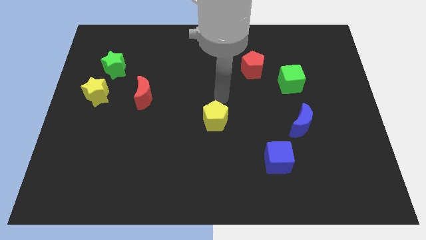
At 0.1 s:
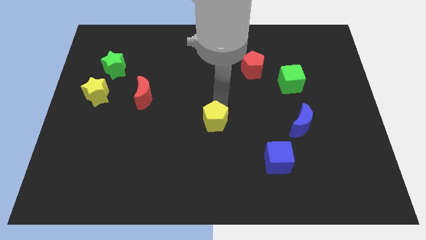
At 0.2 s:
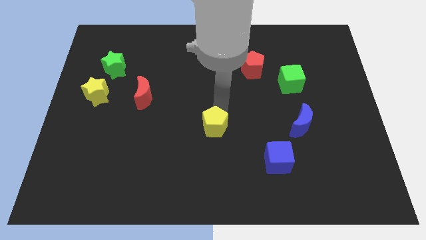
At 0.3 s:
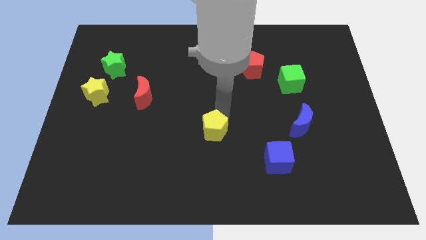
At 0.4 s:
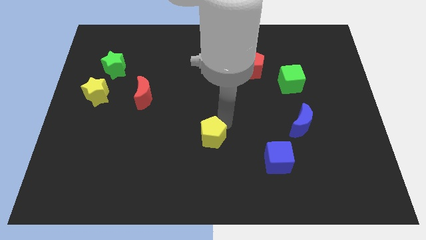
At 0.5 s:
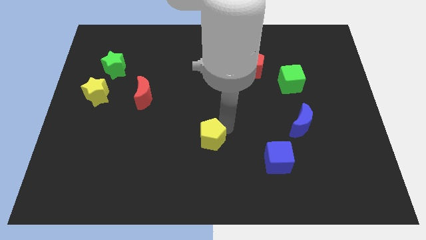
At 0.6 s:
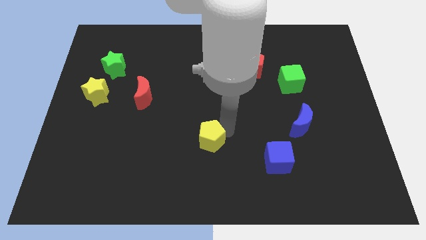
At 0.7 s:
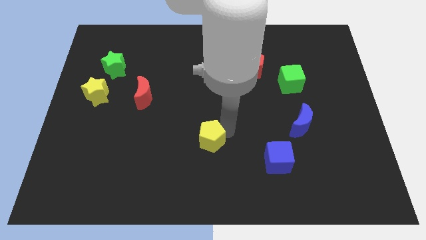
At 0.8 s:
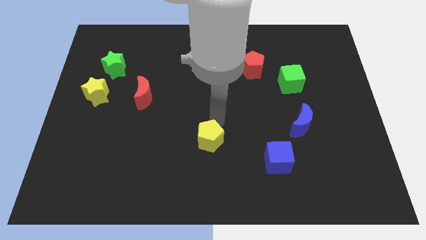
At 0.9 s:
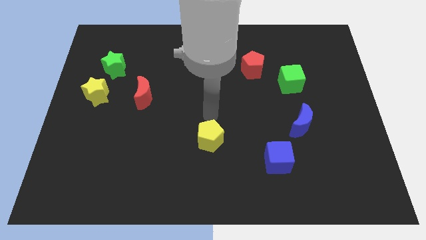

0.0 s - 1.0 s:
push yellow pentagon slightly downwards

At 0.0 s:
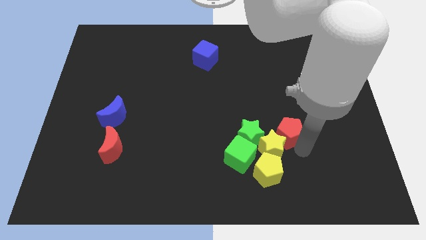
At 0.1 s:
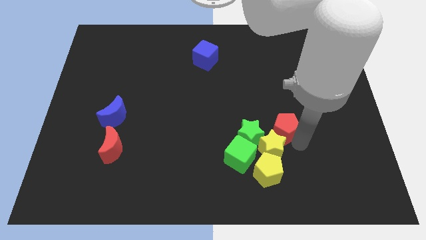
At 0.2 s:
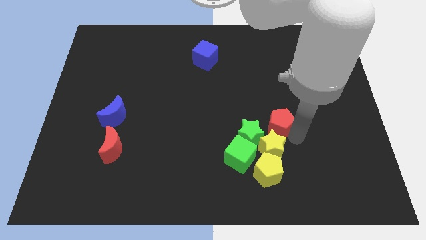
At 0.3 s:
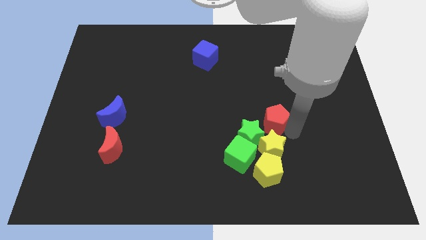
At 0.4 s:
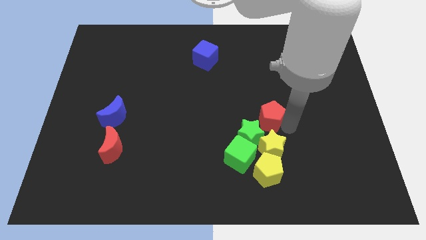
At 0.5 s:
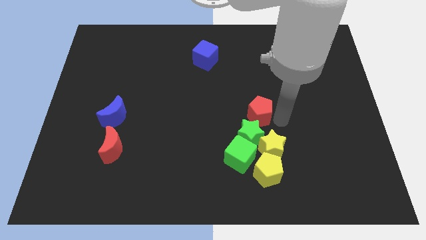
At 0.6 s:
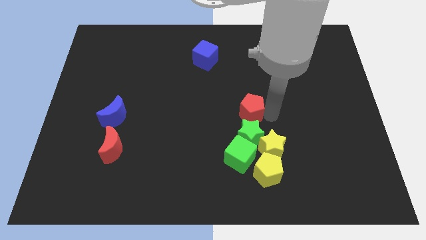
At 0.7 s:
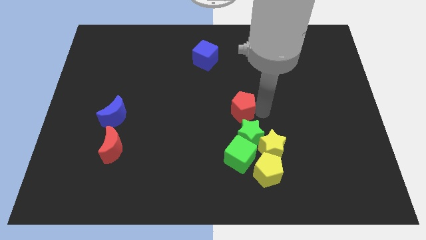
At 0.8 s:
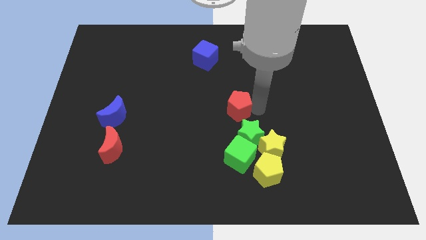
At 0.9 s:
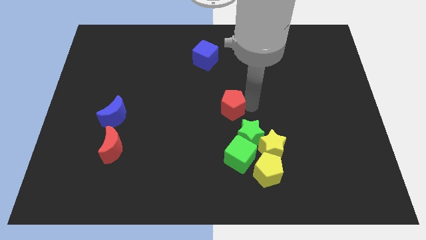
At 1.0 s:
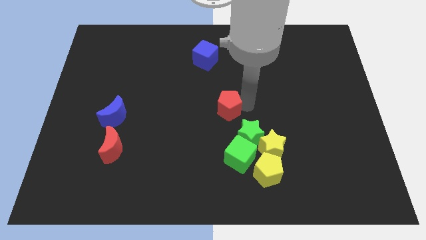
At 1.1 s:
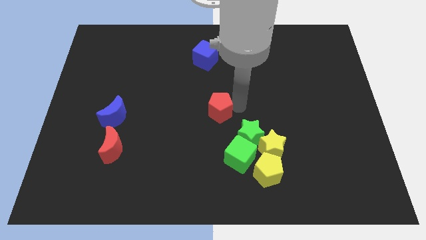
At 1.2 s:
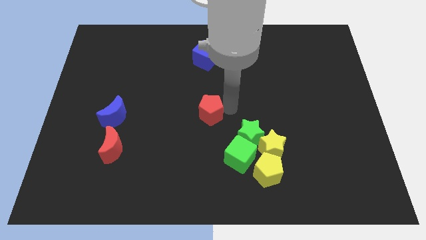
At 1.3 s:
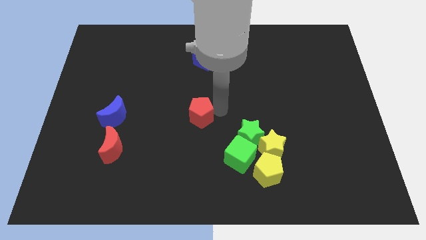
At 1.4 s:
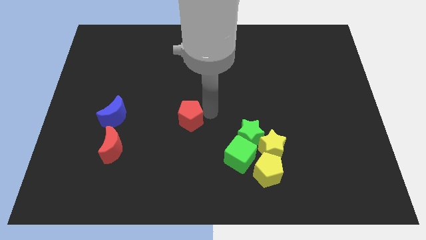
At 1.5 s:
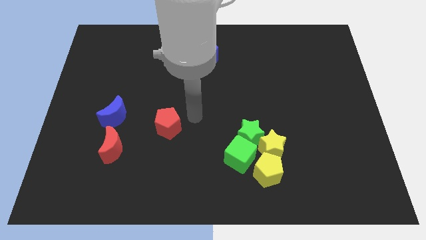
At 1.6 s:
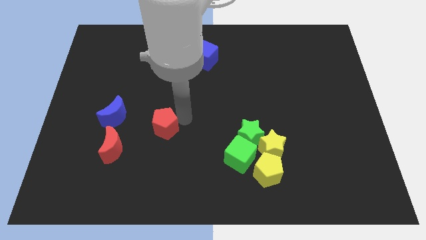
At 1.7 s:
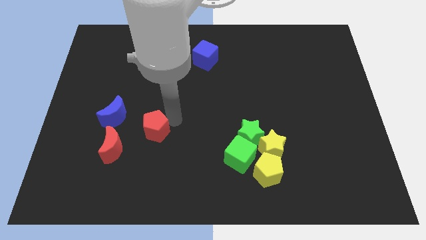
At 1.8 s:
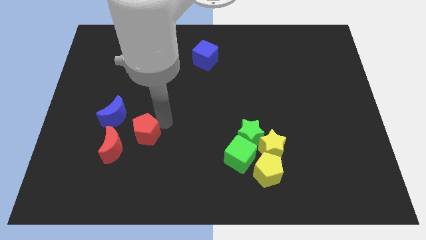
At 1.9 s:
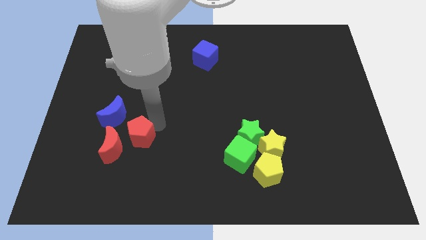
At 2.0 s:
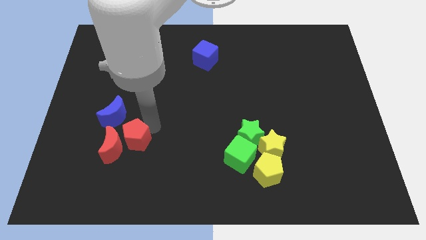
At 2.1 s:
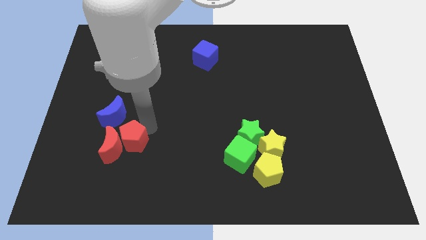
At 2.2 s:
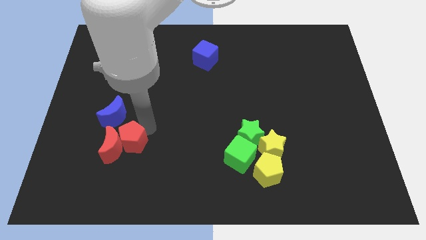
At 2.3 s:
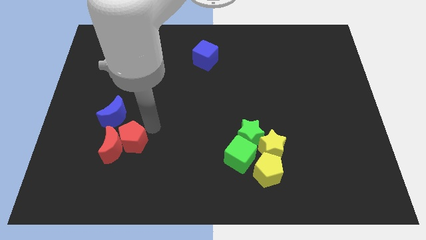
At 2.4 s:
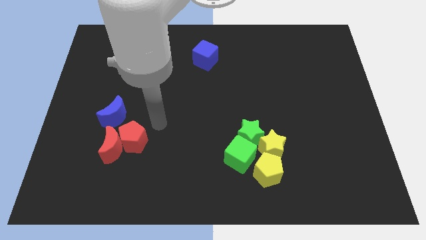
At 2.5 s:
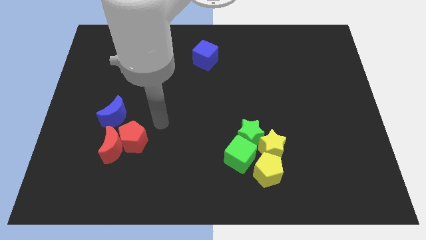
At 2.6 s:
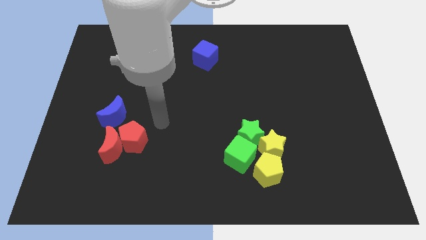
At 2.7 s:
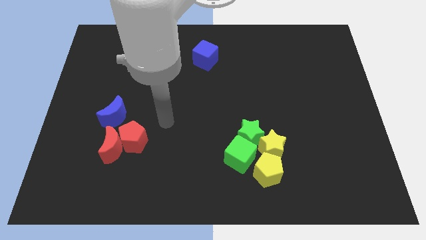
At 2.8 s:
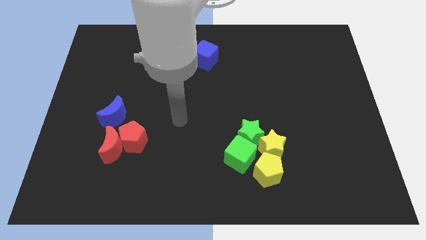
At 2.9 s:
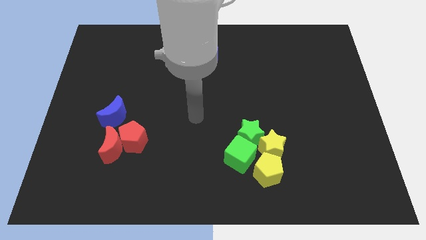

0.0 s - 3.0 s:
slide the red pentagon into the red crescent

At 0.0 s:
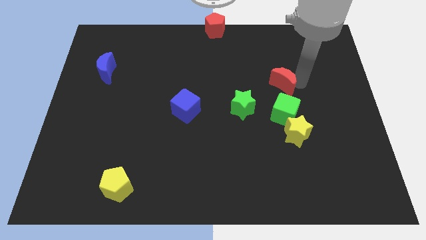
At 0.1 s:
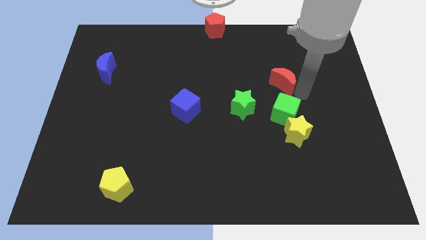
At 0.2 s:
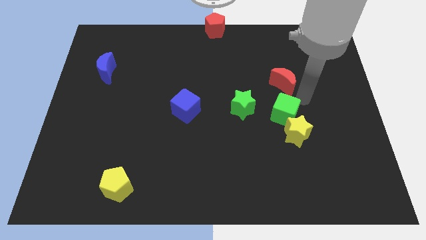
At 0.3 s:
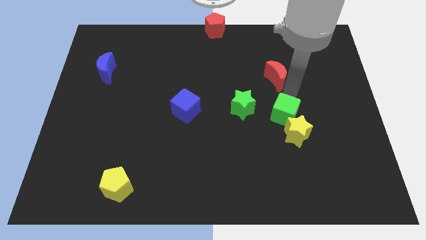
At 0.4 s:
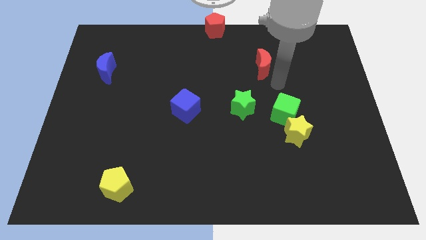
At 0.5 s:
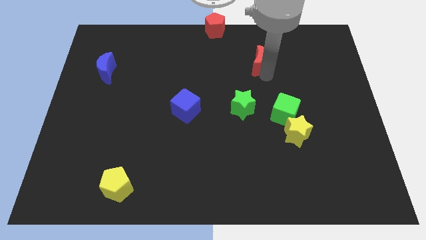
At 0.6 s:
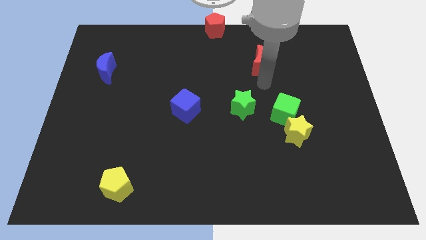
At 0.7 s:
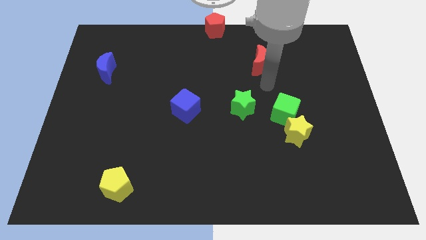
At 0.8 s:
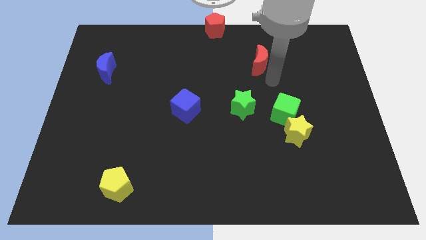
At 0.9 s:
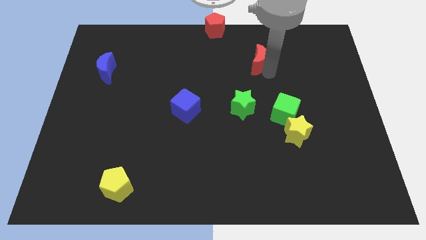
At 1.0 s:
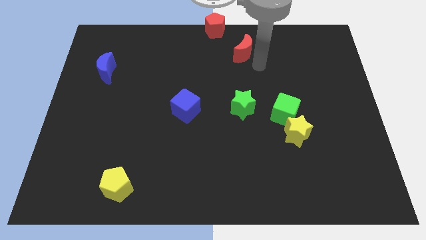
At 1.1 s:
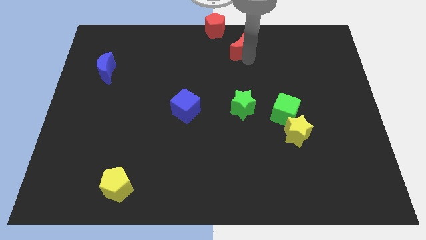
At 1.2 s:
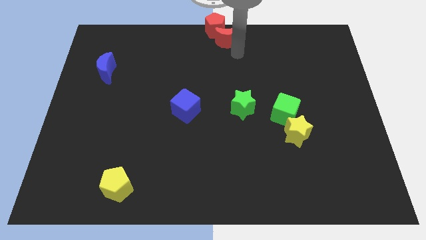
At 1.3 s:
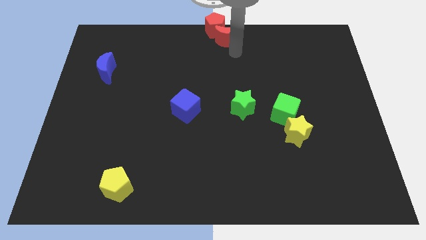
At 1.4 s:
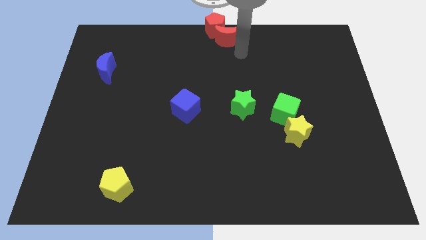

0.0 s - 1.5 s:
push the red crescent into the red pentagon

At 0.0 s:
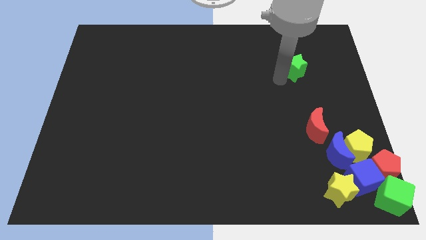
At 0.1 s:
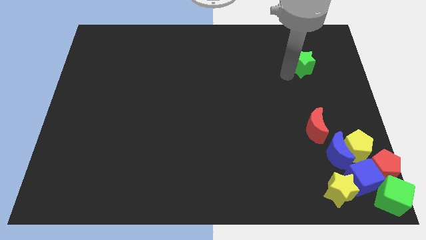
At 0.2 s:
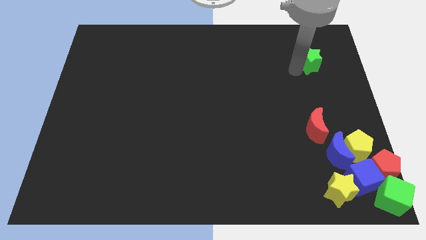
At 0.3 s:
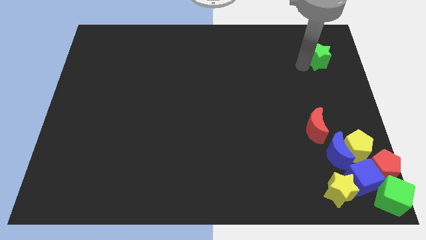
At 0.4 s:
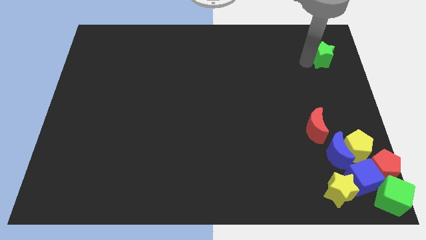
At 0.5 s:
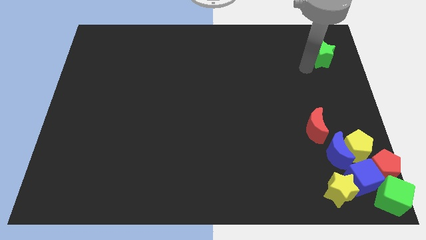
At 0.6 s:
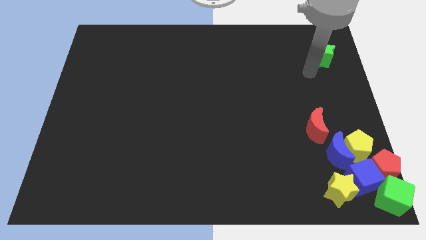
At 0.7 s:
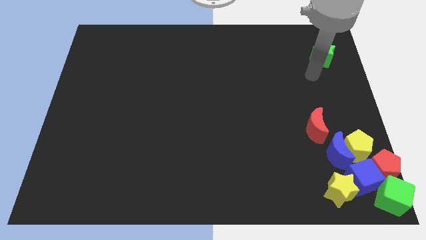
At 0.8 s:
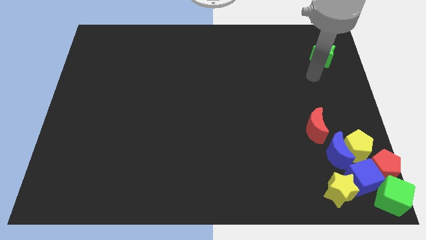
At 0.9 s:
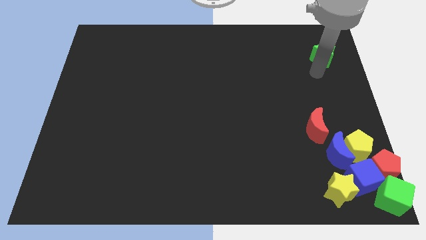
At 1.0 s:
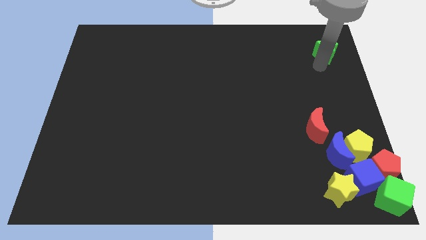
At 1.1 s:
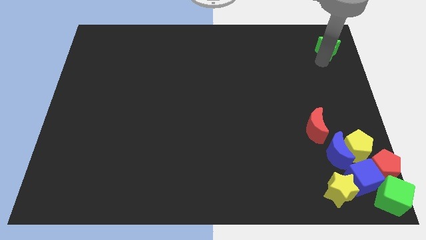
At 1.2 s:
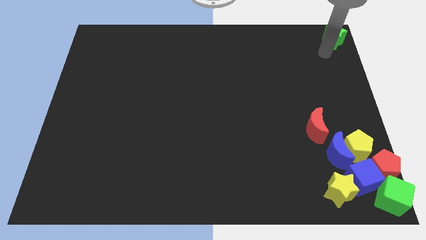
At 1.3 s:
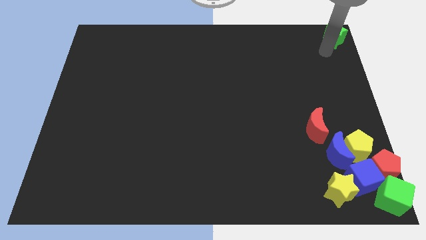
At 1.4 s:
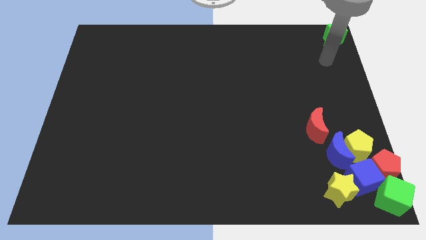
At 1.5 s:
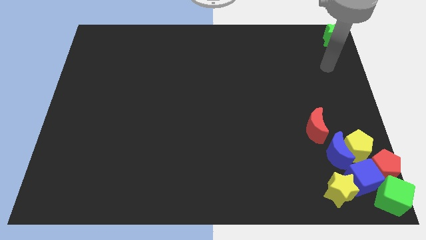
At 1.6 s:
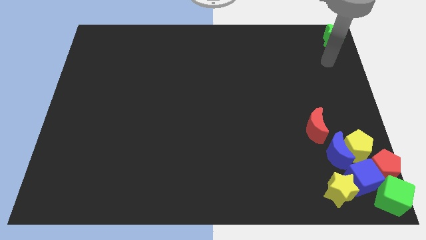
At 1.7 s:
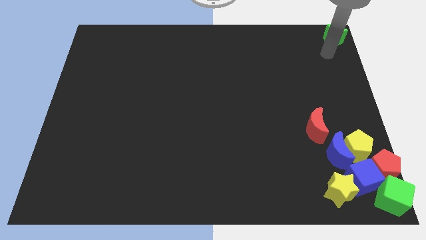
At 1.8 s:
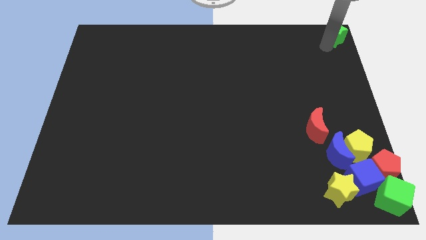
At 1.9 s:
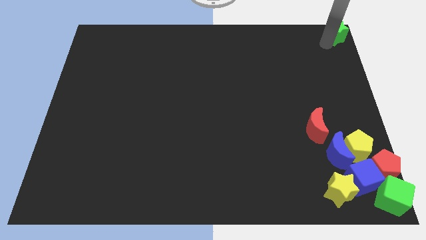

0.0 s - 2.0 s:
move the green star to the top right of the board

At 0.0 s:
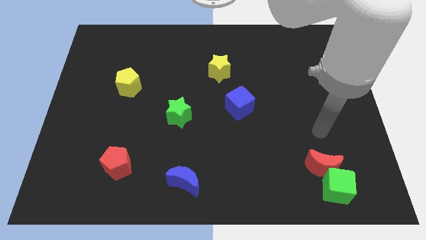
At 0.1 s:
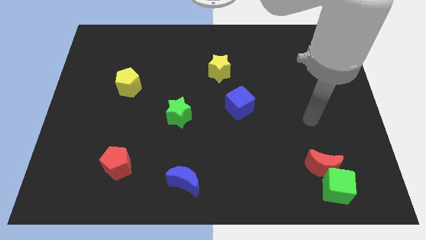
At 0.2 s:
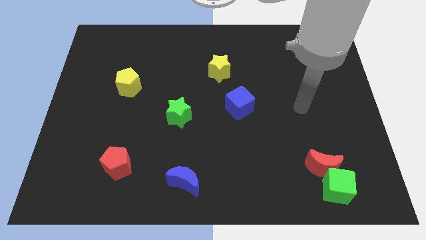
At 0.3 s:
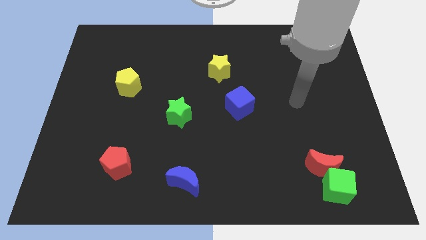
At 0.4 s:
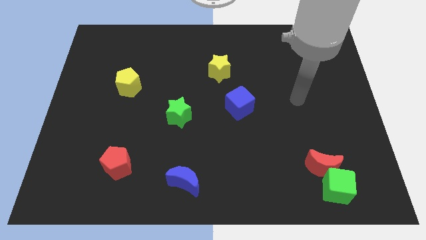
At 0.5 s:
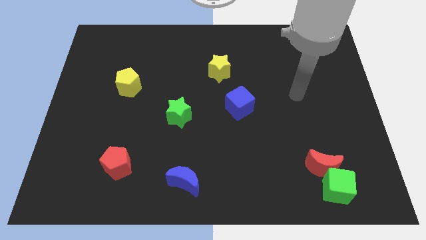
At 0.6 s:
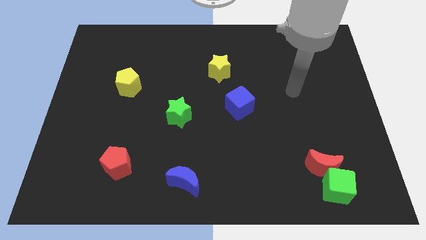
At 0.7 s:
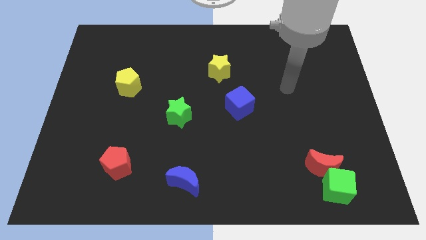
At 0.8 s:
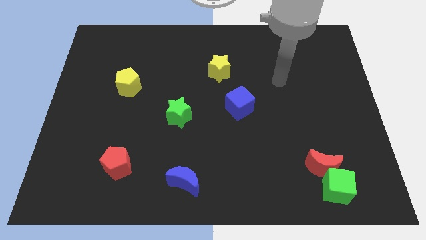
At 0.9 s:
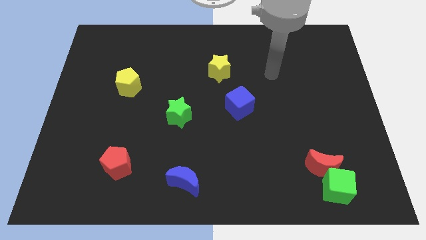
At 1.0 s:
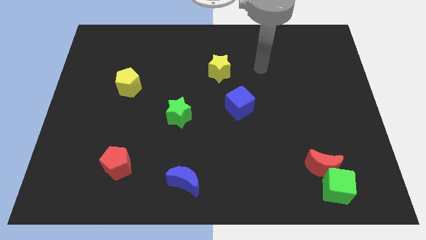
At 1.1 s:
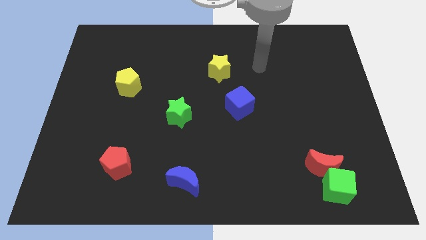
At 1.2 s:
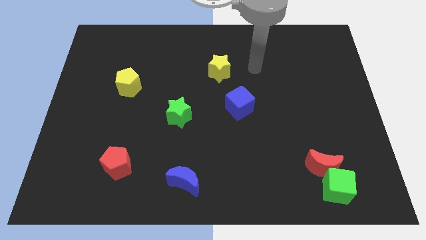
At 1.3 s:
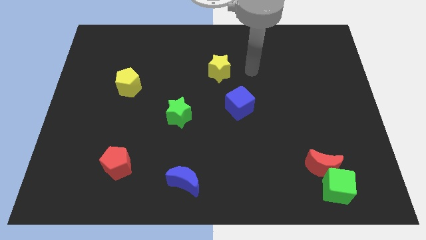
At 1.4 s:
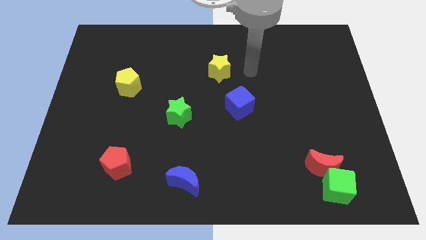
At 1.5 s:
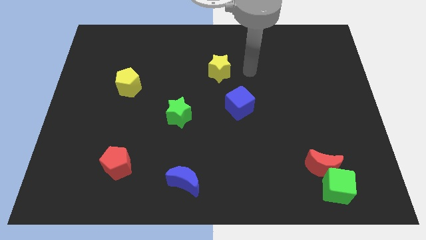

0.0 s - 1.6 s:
place your hand to right side of the yellow star
